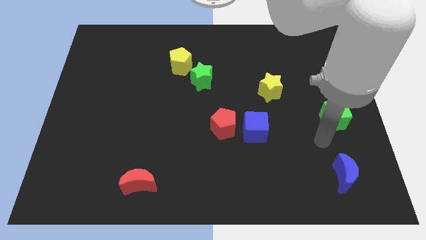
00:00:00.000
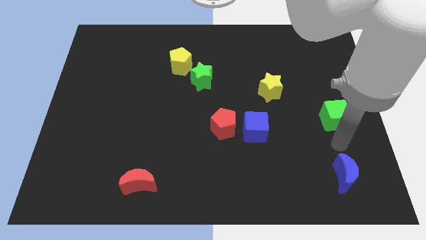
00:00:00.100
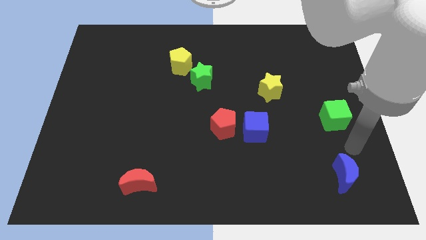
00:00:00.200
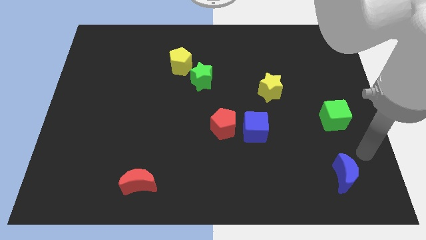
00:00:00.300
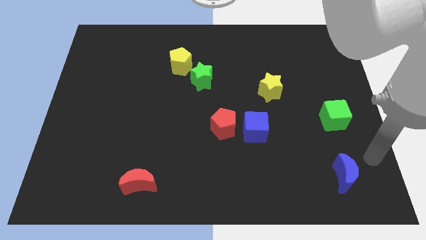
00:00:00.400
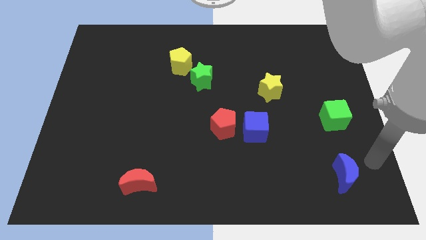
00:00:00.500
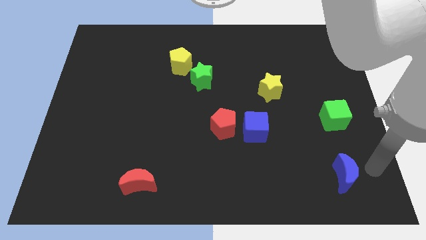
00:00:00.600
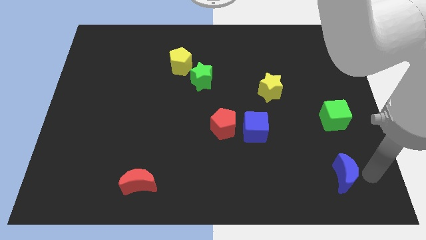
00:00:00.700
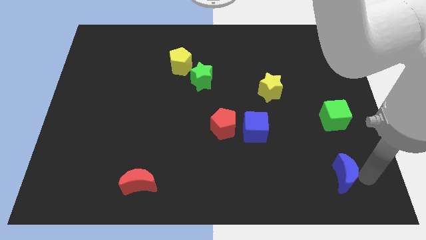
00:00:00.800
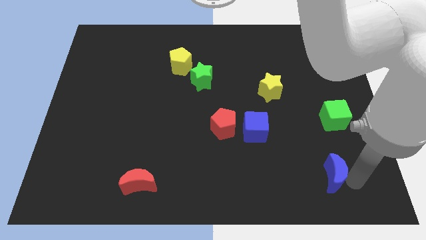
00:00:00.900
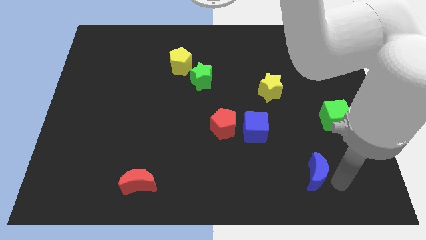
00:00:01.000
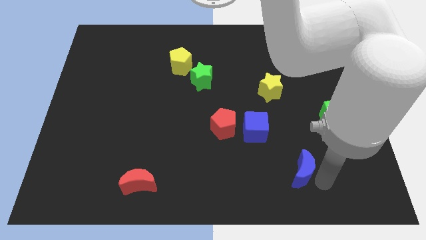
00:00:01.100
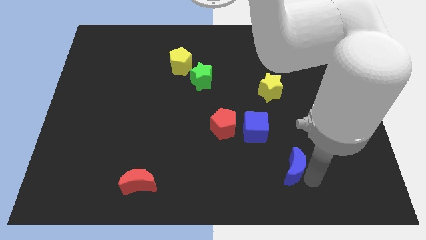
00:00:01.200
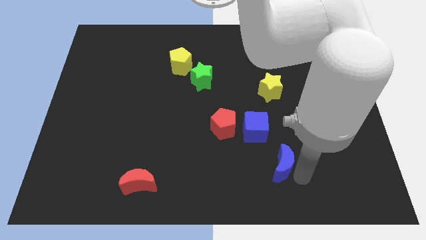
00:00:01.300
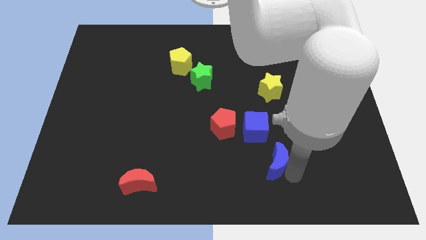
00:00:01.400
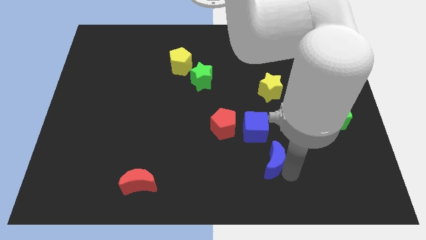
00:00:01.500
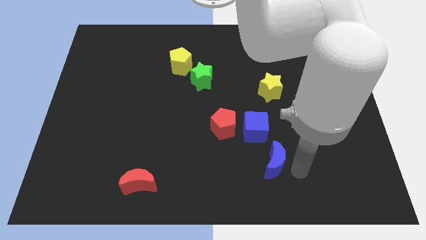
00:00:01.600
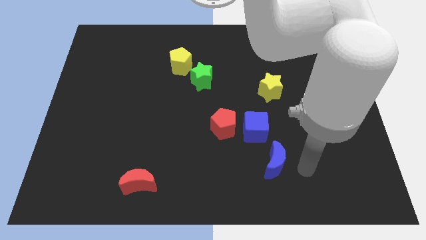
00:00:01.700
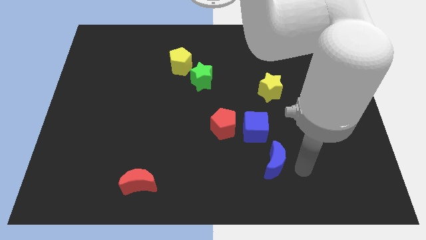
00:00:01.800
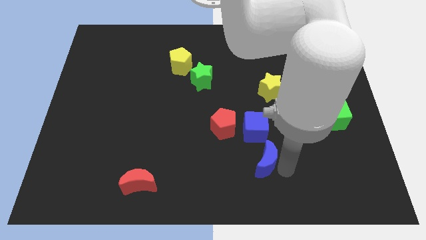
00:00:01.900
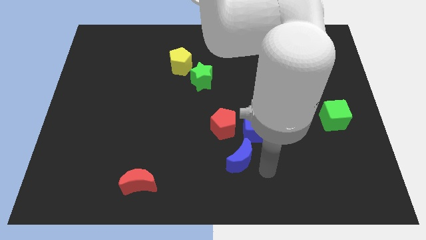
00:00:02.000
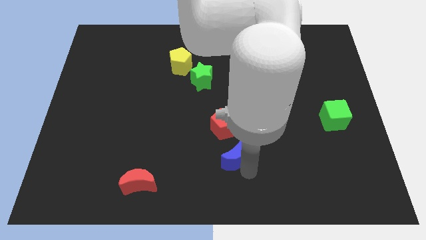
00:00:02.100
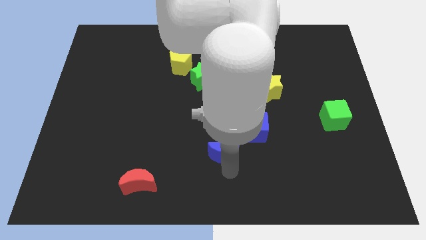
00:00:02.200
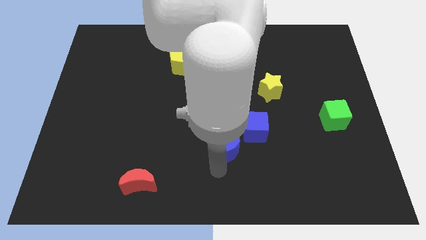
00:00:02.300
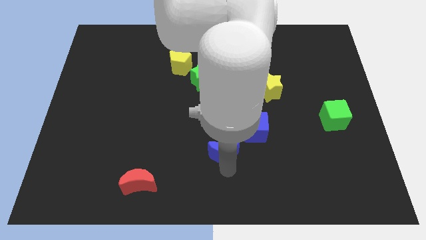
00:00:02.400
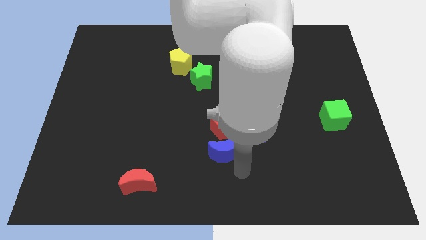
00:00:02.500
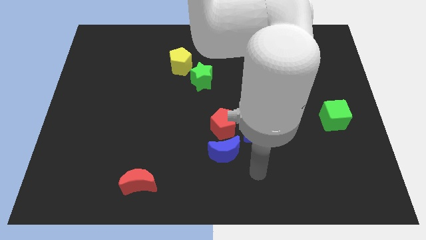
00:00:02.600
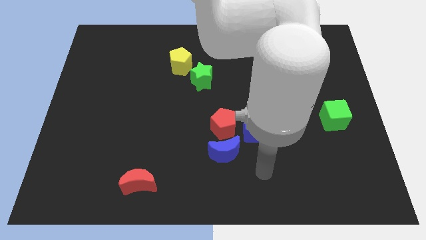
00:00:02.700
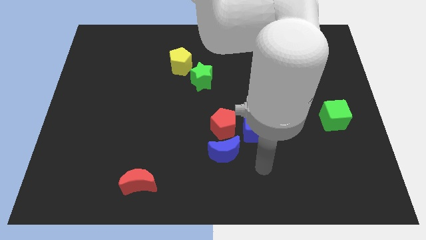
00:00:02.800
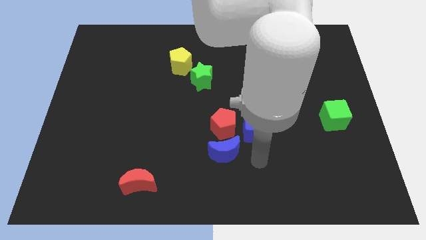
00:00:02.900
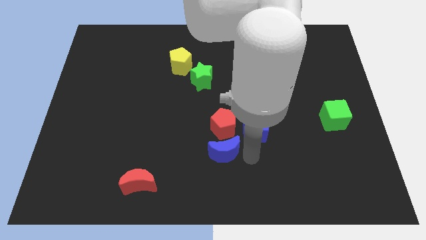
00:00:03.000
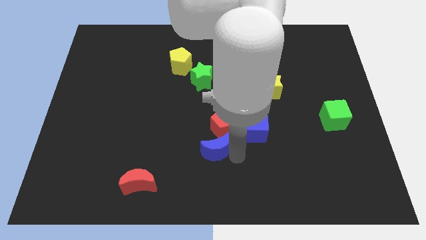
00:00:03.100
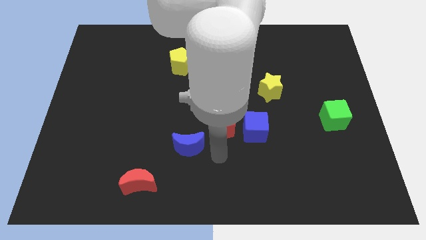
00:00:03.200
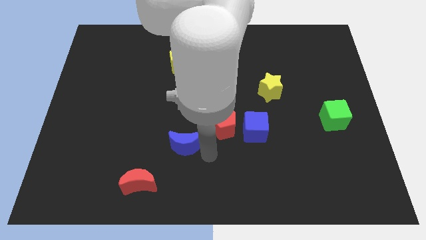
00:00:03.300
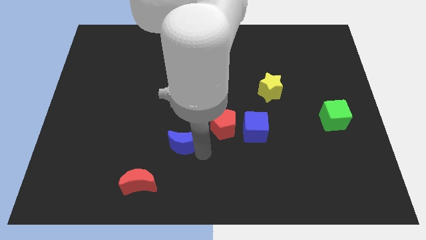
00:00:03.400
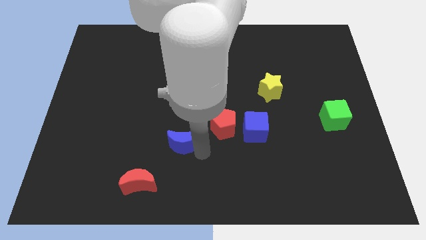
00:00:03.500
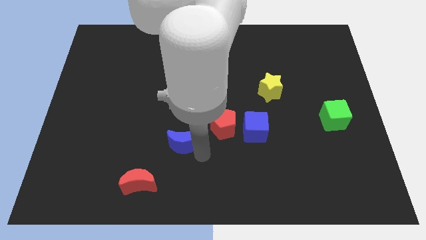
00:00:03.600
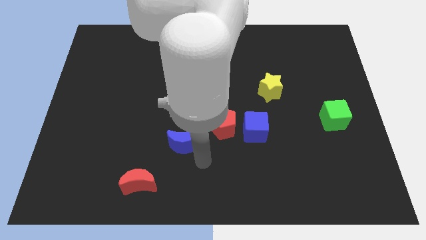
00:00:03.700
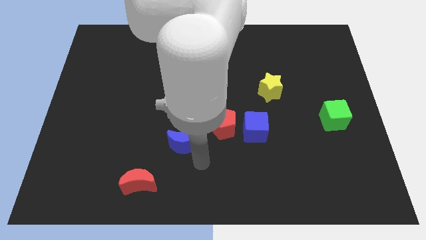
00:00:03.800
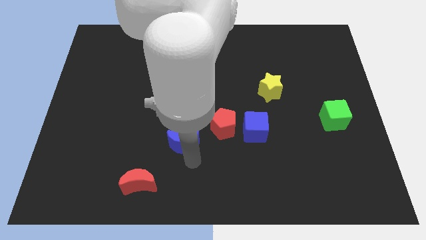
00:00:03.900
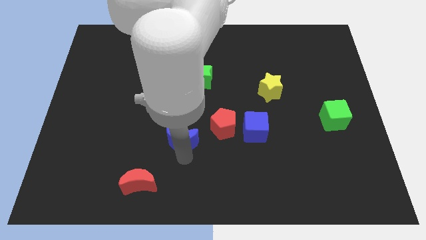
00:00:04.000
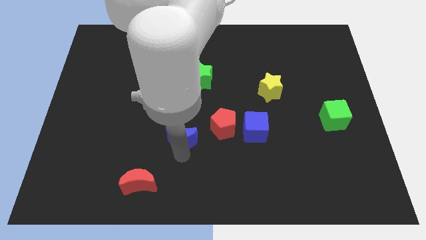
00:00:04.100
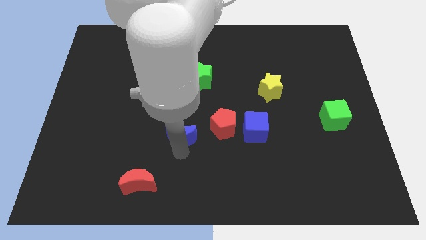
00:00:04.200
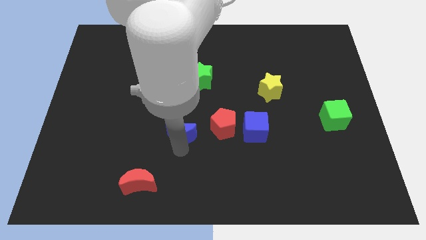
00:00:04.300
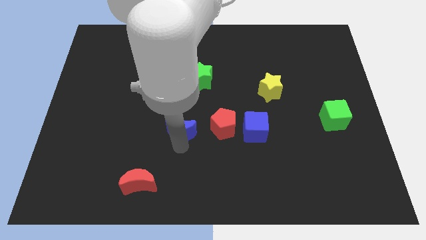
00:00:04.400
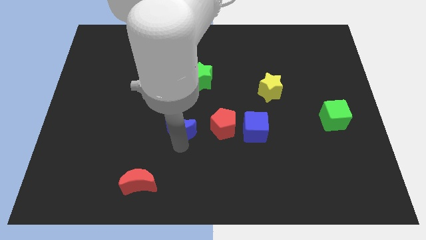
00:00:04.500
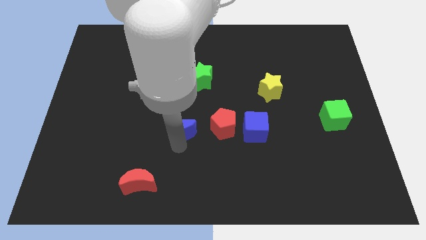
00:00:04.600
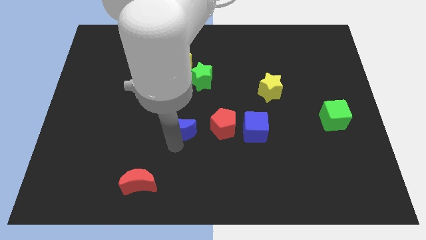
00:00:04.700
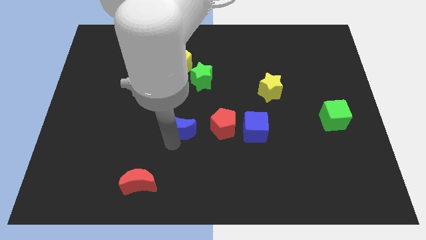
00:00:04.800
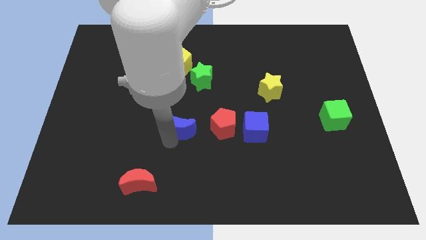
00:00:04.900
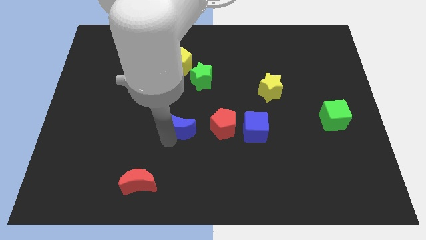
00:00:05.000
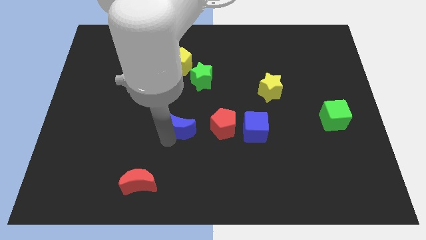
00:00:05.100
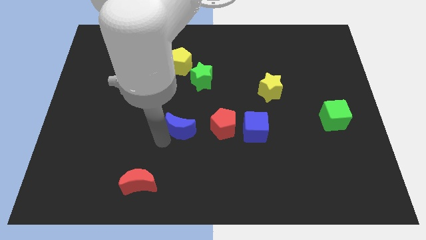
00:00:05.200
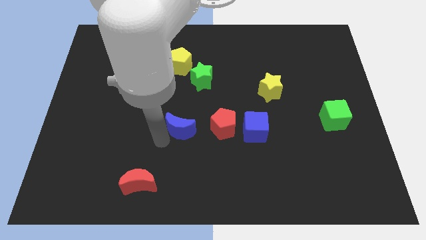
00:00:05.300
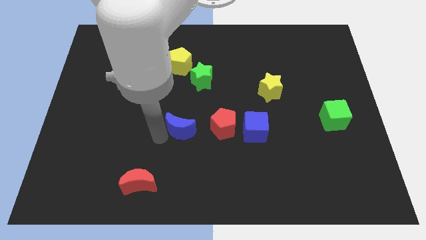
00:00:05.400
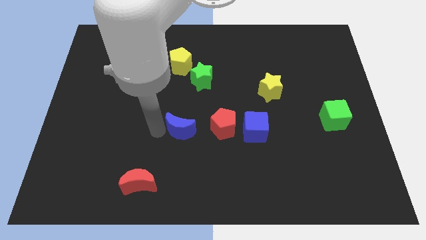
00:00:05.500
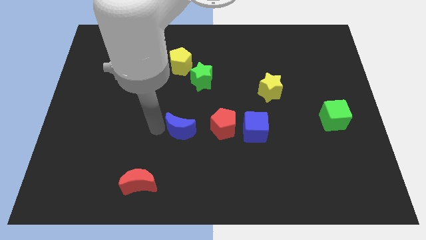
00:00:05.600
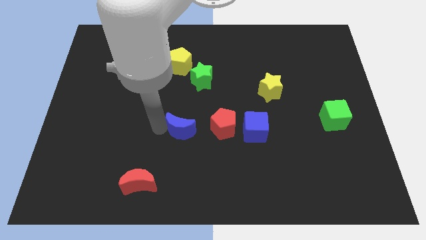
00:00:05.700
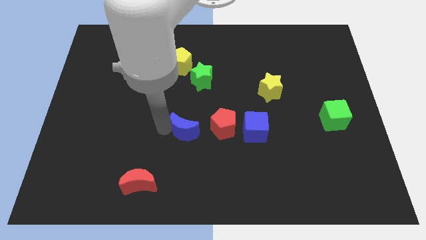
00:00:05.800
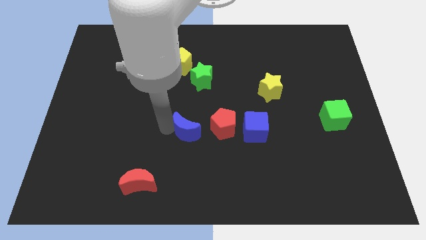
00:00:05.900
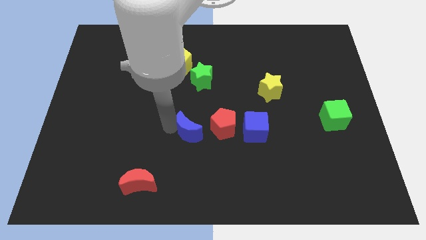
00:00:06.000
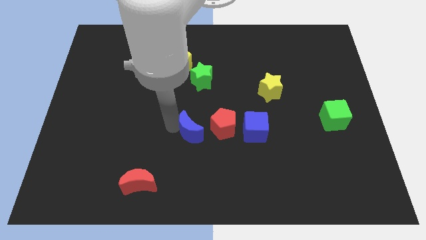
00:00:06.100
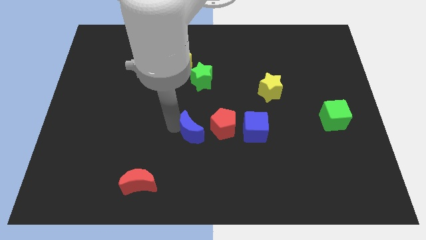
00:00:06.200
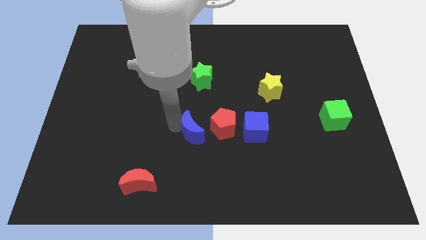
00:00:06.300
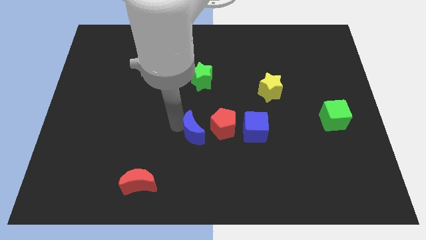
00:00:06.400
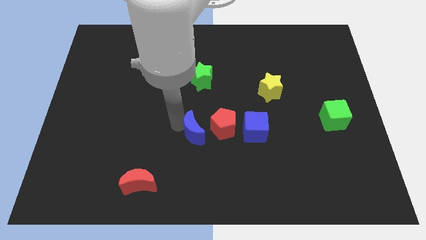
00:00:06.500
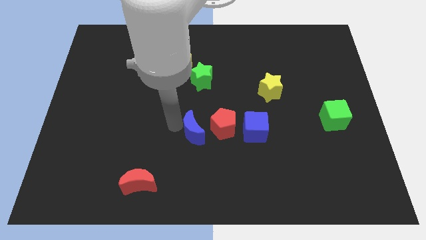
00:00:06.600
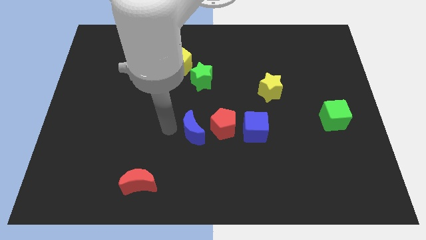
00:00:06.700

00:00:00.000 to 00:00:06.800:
place the blue moon to the left side of red pentagon

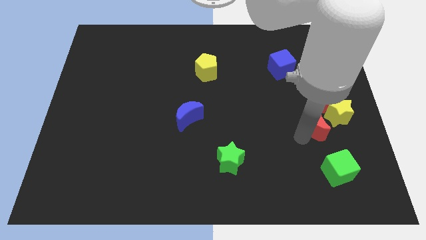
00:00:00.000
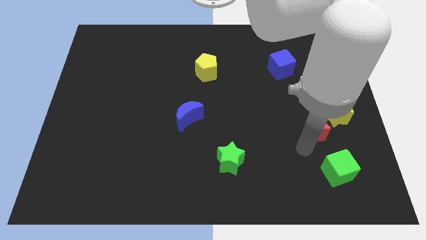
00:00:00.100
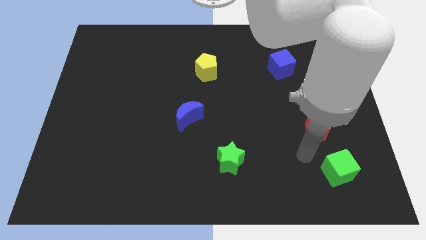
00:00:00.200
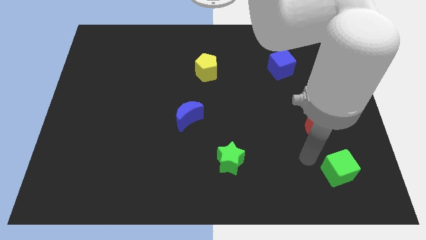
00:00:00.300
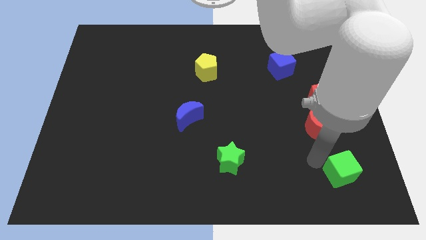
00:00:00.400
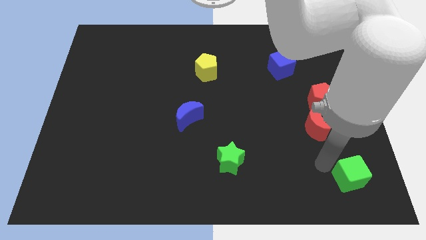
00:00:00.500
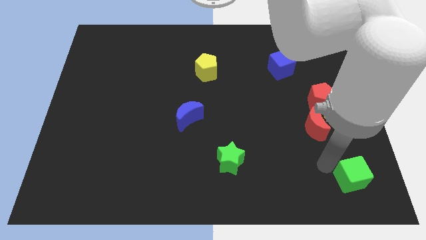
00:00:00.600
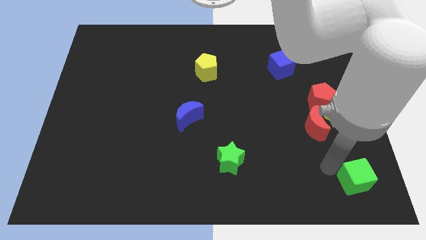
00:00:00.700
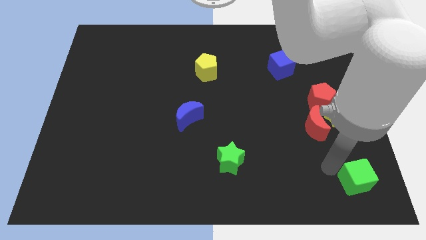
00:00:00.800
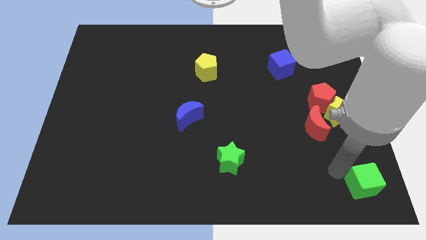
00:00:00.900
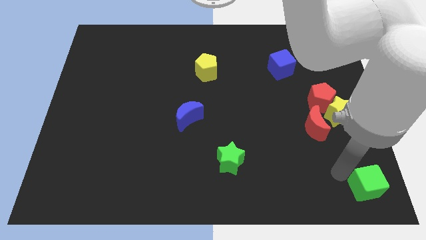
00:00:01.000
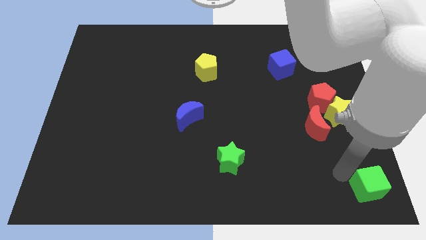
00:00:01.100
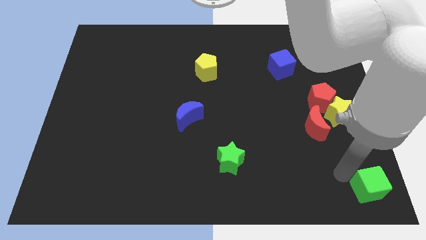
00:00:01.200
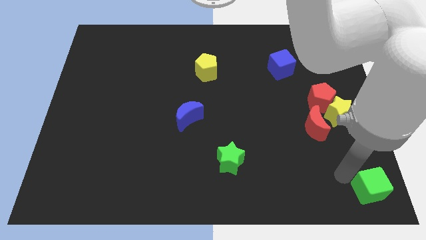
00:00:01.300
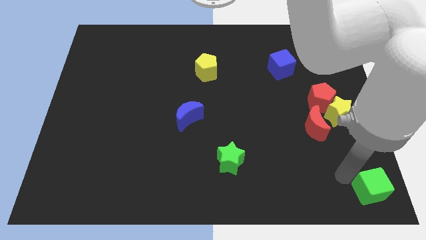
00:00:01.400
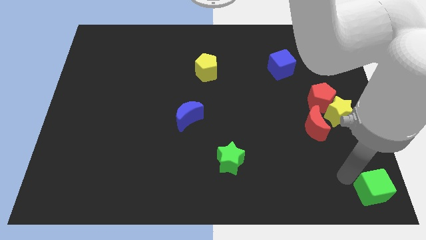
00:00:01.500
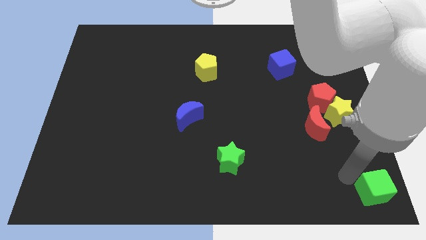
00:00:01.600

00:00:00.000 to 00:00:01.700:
move the green cube to the bottom right corner of the board

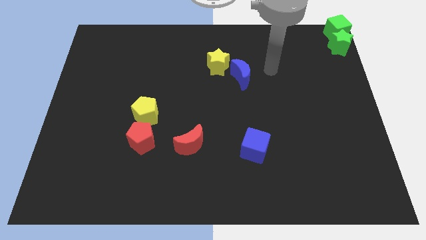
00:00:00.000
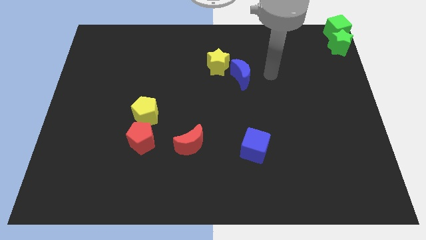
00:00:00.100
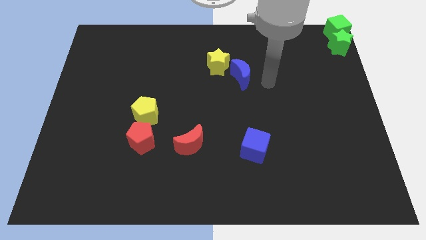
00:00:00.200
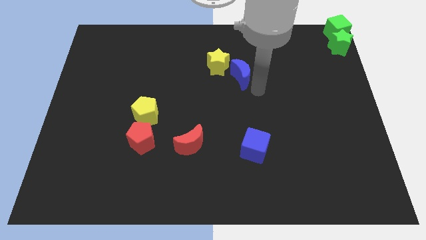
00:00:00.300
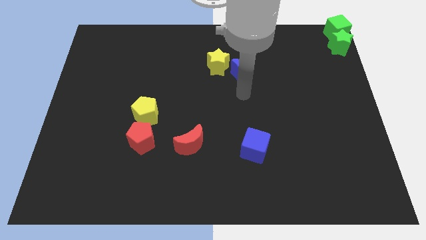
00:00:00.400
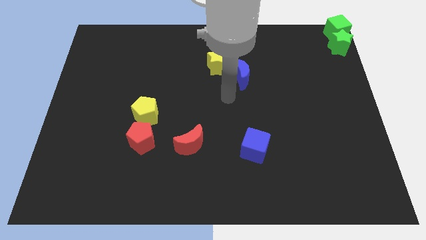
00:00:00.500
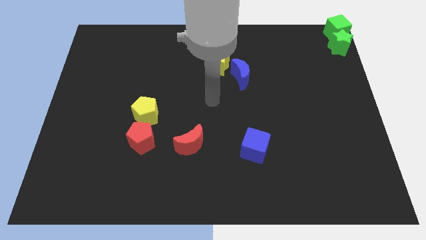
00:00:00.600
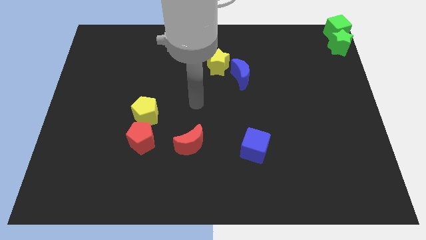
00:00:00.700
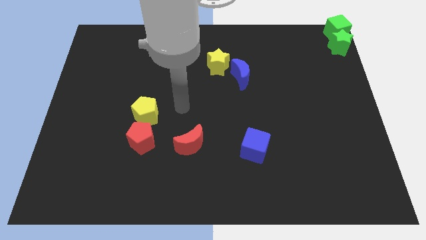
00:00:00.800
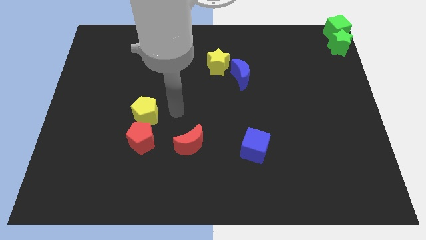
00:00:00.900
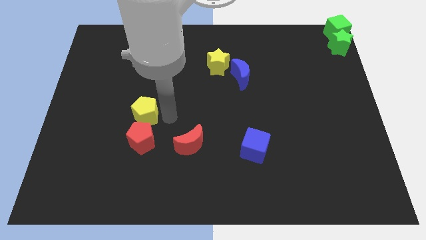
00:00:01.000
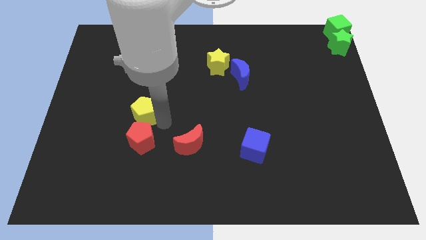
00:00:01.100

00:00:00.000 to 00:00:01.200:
place your arm to the right of the yellow pentagon
